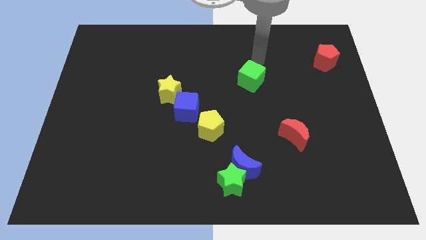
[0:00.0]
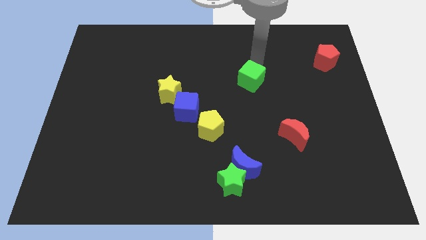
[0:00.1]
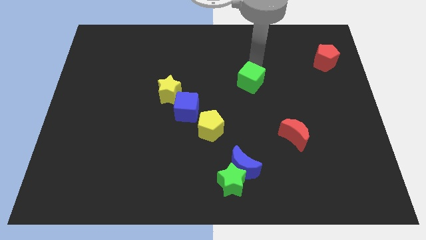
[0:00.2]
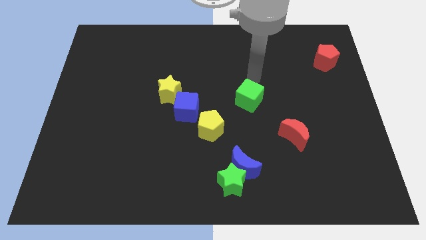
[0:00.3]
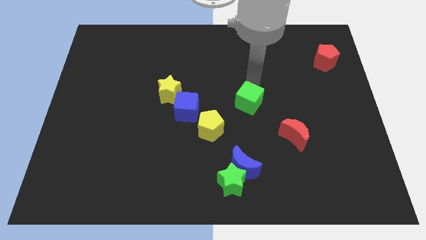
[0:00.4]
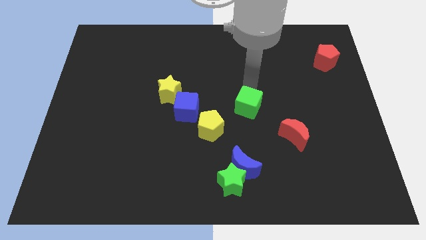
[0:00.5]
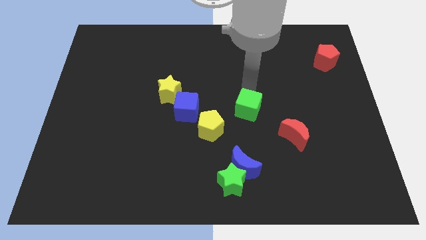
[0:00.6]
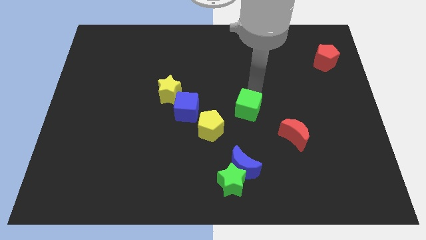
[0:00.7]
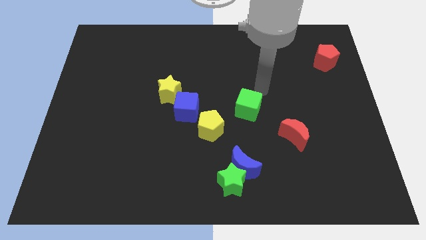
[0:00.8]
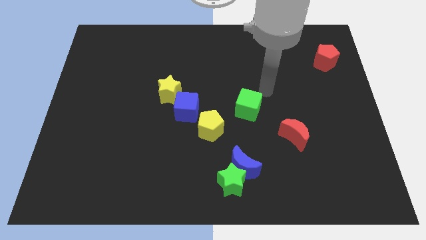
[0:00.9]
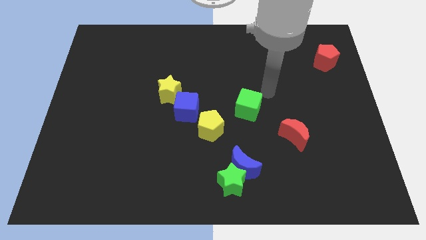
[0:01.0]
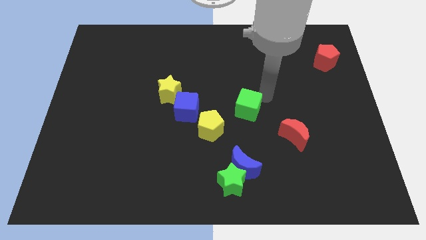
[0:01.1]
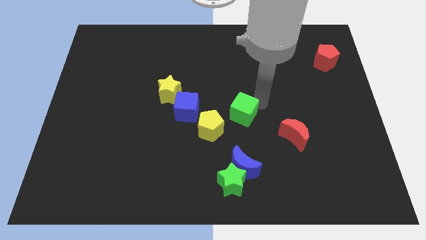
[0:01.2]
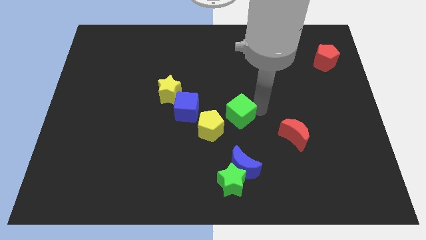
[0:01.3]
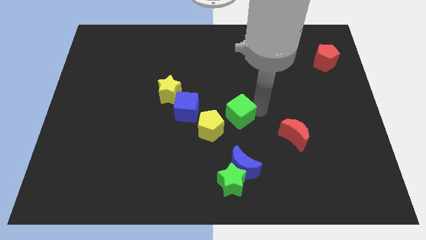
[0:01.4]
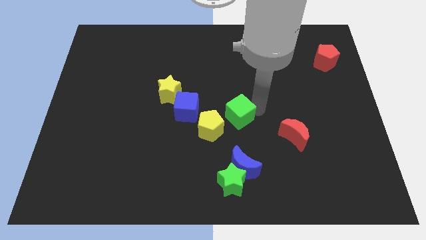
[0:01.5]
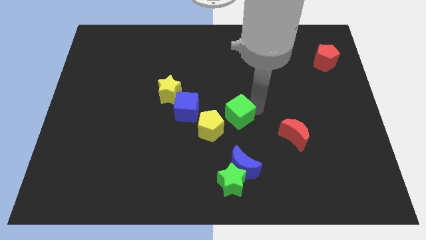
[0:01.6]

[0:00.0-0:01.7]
slide the green cube slightly downwards

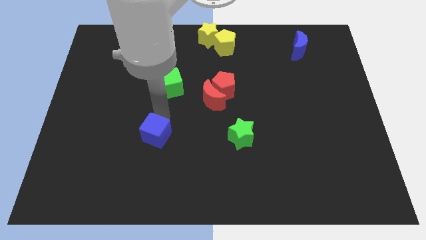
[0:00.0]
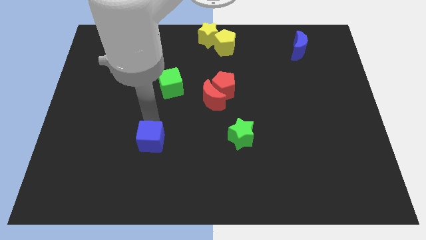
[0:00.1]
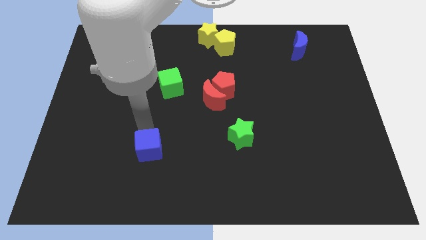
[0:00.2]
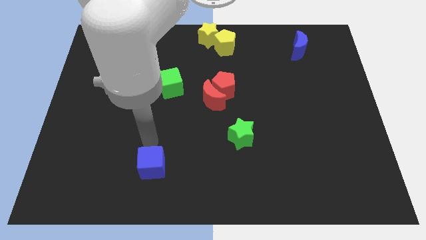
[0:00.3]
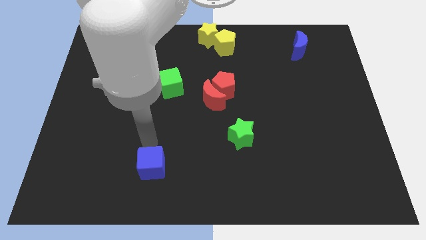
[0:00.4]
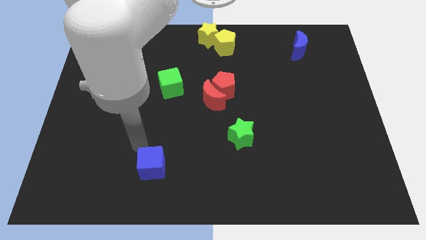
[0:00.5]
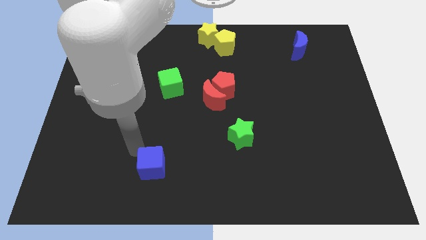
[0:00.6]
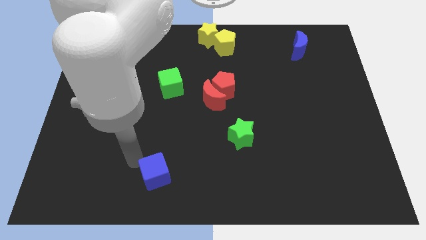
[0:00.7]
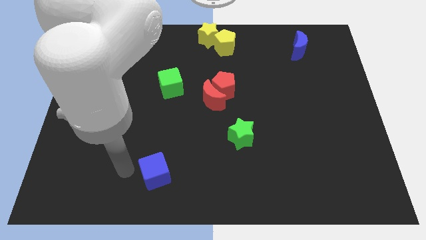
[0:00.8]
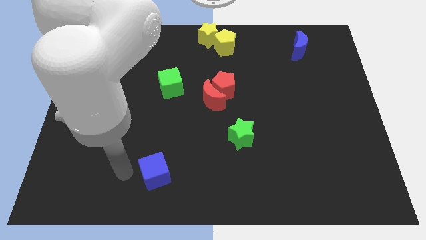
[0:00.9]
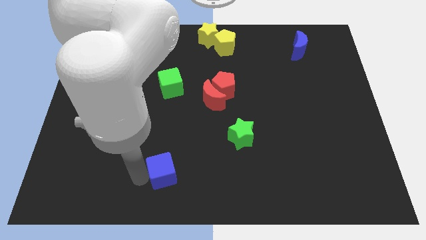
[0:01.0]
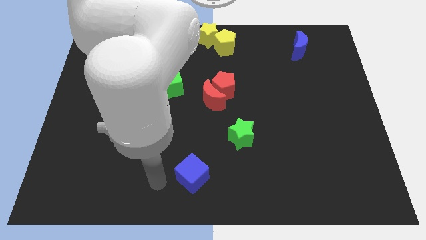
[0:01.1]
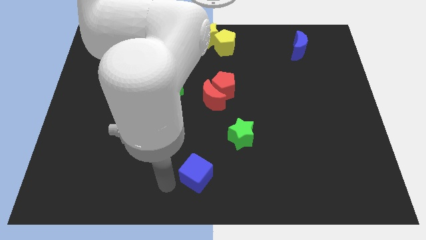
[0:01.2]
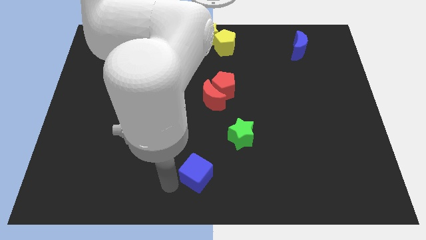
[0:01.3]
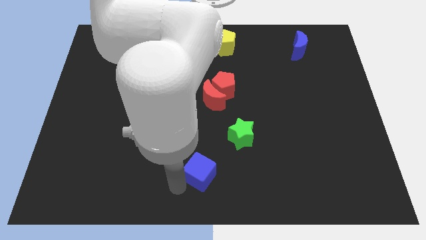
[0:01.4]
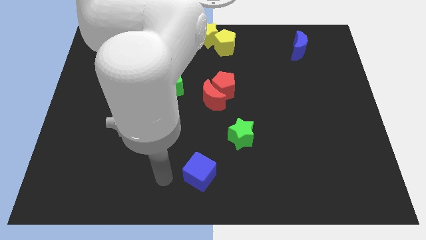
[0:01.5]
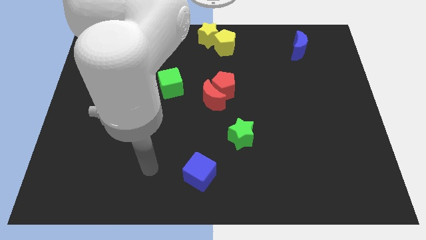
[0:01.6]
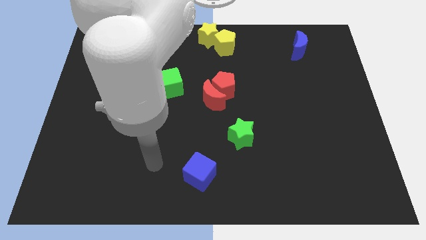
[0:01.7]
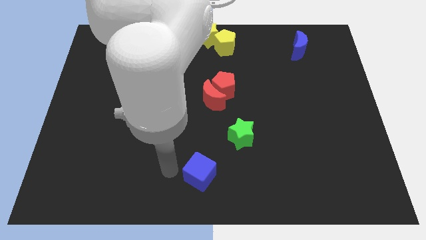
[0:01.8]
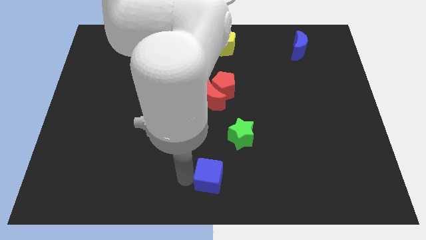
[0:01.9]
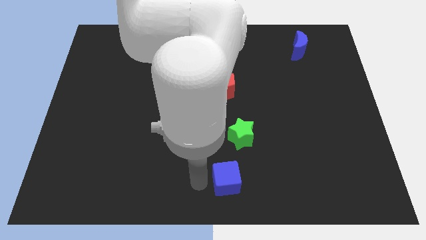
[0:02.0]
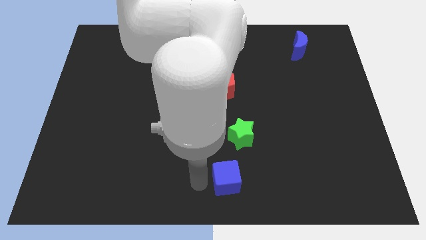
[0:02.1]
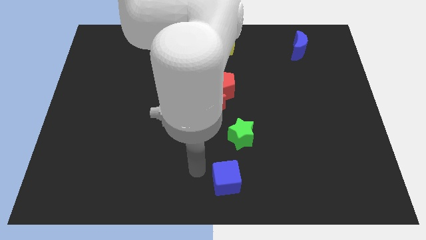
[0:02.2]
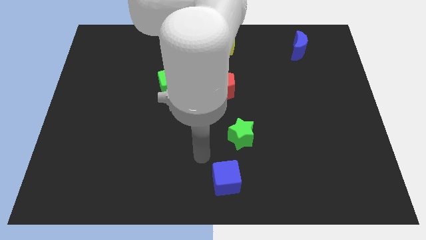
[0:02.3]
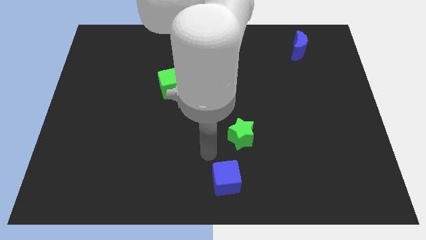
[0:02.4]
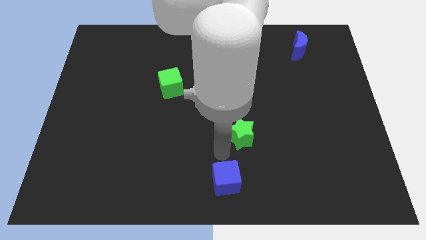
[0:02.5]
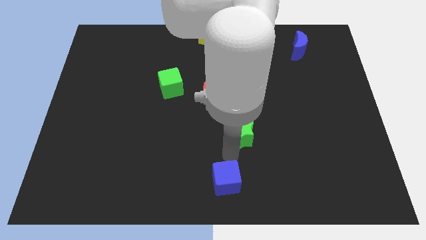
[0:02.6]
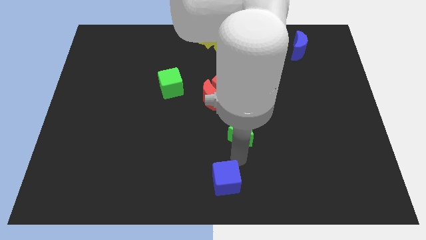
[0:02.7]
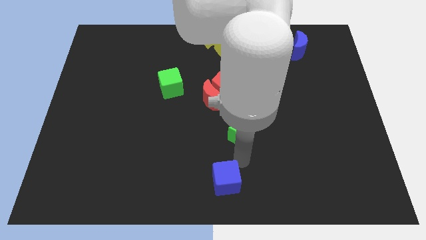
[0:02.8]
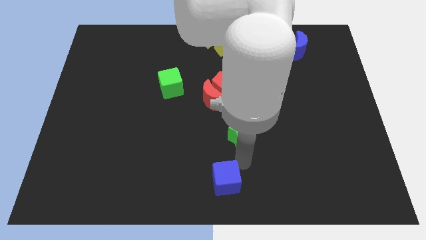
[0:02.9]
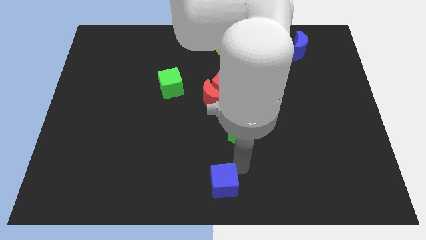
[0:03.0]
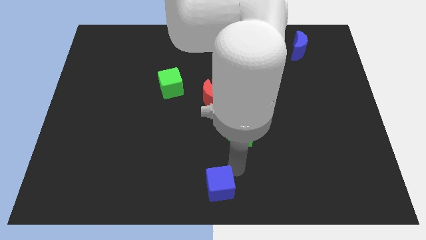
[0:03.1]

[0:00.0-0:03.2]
move the blue cube to the bottom middle of the board

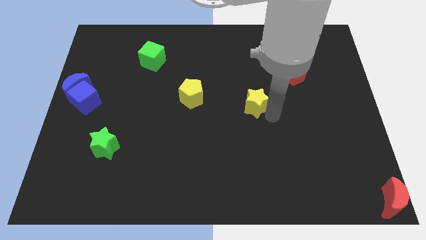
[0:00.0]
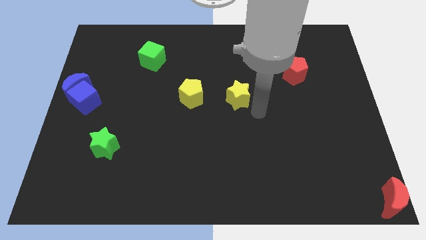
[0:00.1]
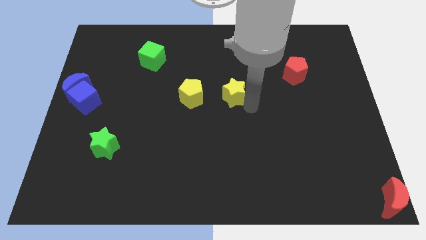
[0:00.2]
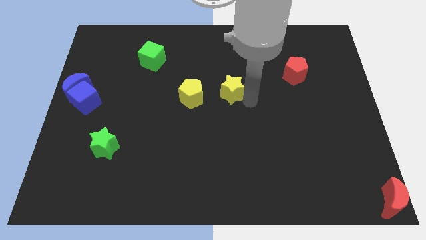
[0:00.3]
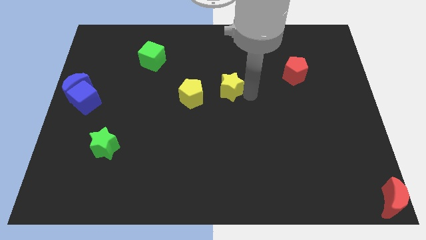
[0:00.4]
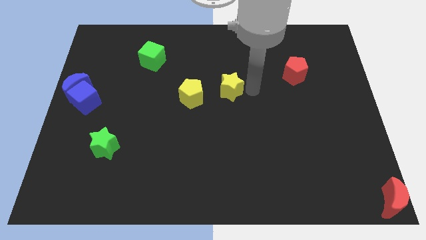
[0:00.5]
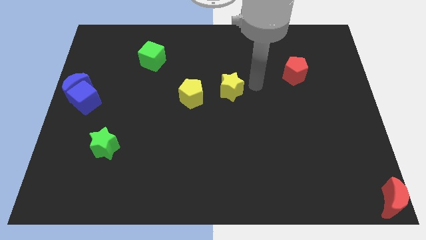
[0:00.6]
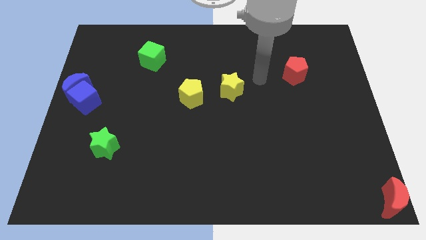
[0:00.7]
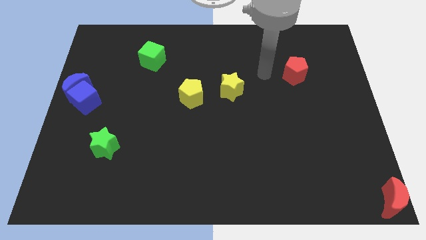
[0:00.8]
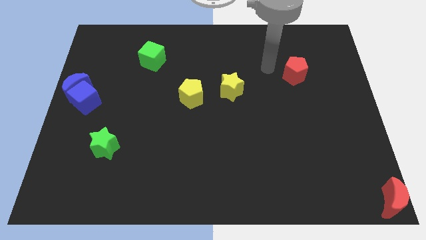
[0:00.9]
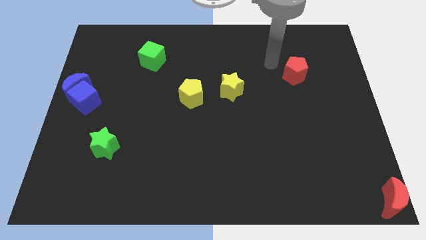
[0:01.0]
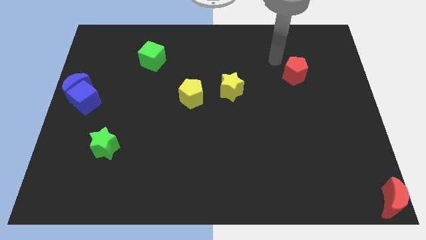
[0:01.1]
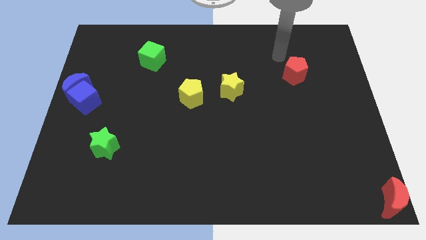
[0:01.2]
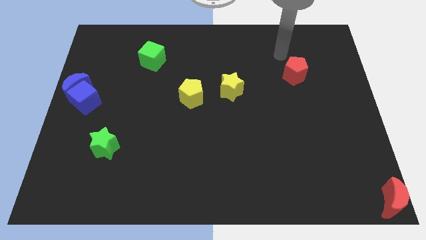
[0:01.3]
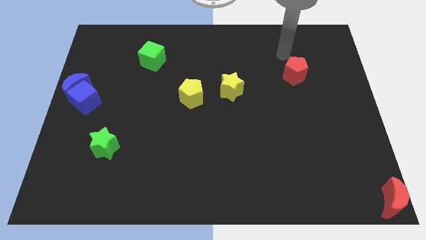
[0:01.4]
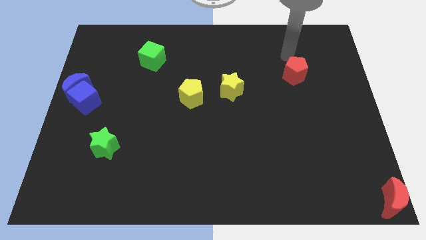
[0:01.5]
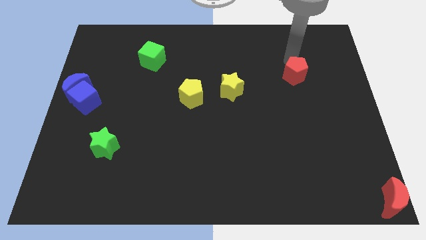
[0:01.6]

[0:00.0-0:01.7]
place the arm to the top of red pentagon

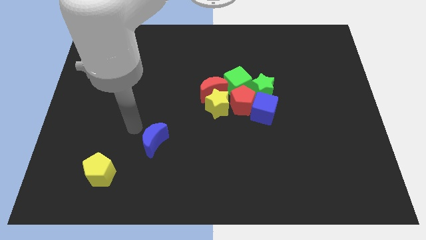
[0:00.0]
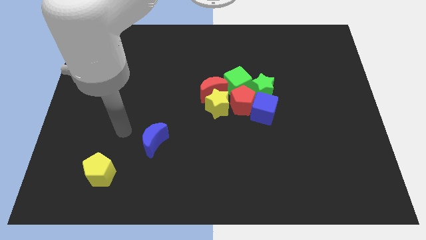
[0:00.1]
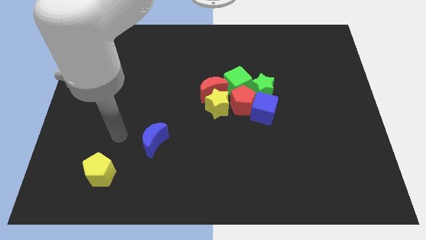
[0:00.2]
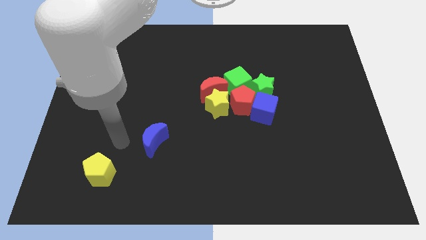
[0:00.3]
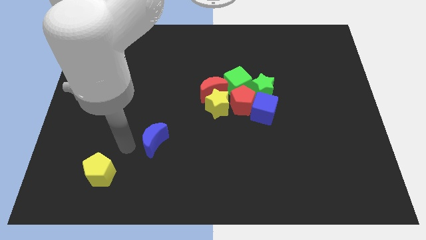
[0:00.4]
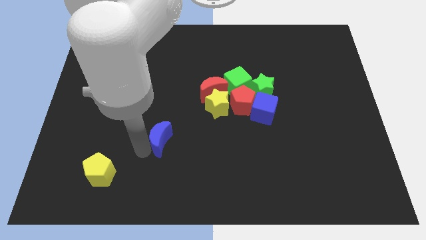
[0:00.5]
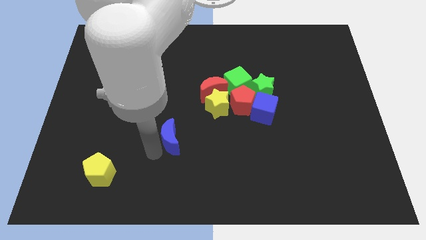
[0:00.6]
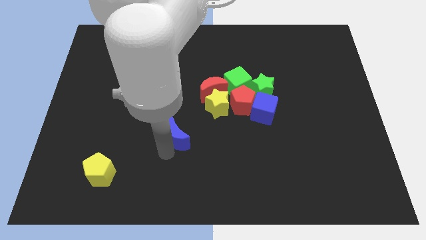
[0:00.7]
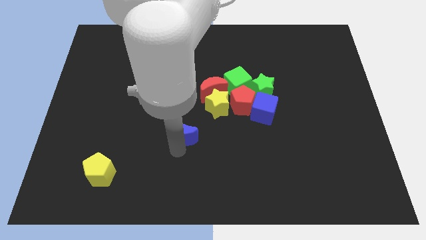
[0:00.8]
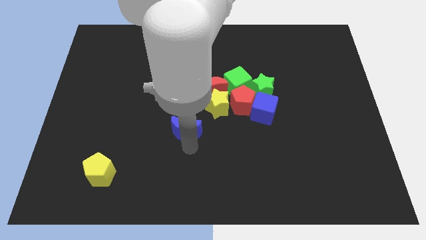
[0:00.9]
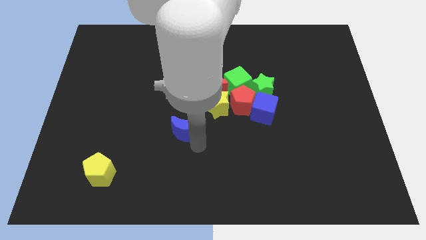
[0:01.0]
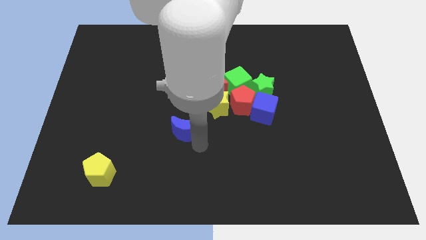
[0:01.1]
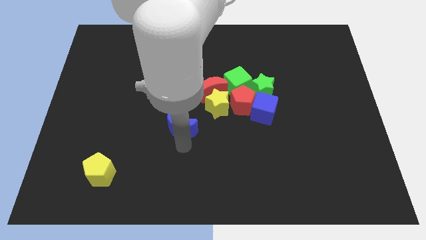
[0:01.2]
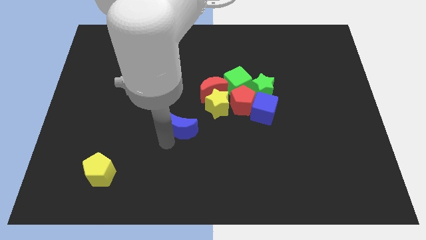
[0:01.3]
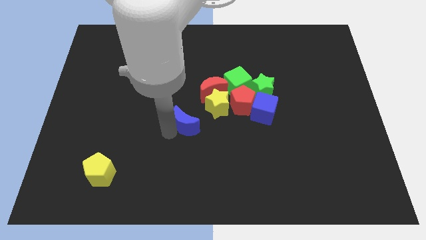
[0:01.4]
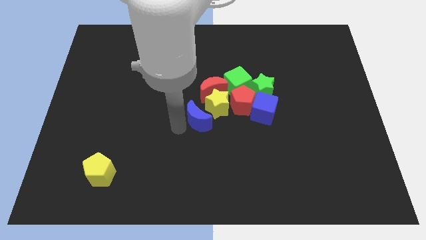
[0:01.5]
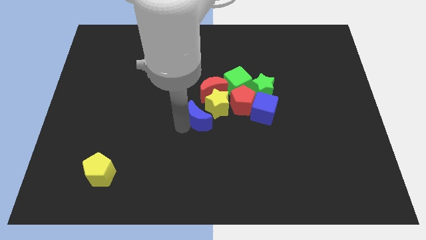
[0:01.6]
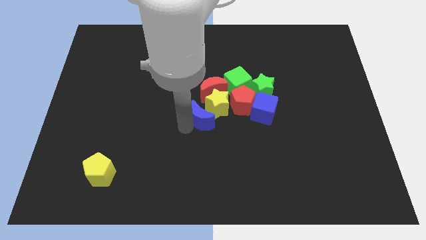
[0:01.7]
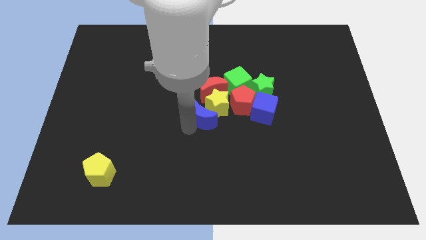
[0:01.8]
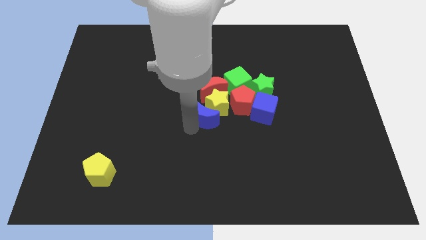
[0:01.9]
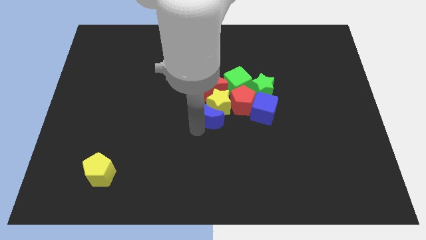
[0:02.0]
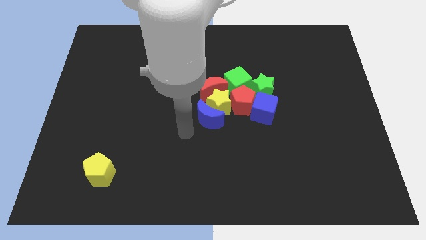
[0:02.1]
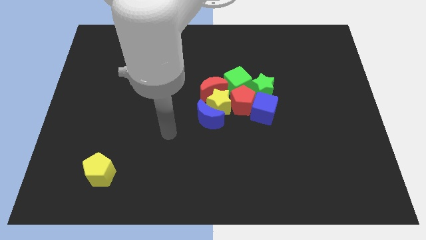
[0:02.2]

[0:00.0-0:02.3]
move the blue moon below into the yellow star
